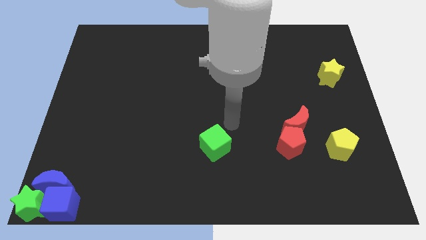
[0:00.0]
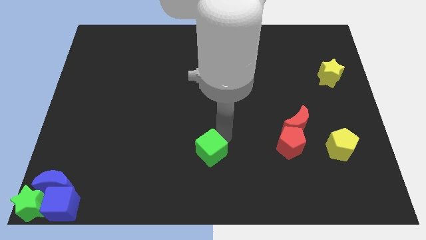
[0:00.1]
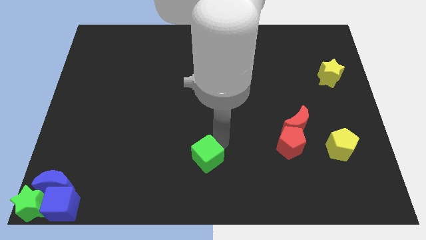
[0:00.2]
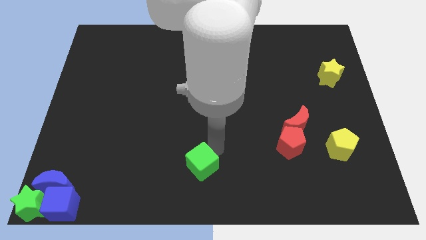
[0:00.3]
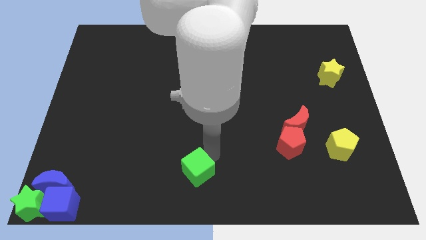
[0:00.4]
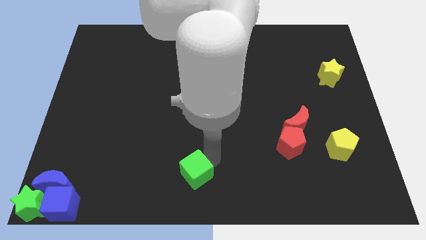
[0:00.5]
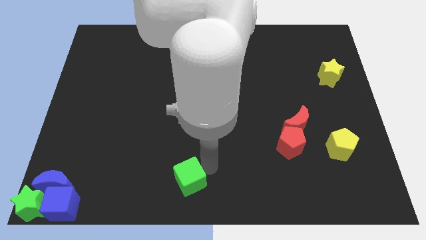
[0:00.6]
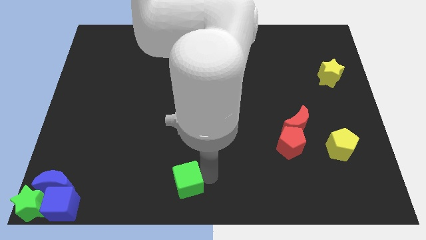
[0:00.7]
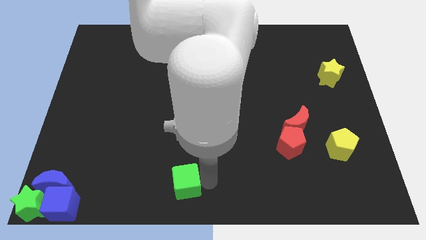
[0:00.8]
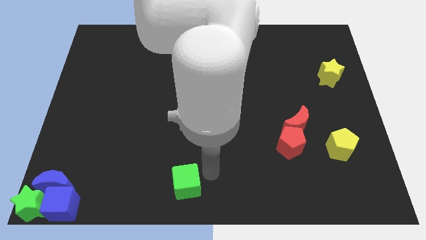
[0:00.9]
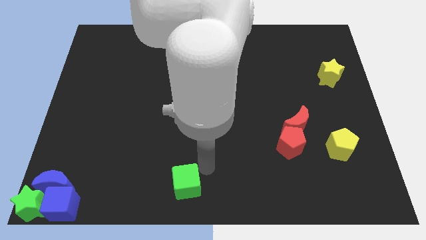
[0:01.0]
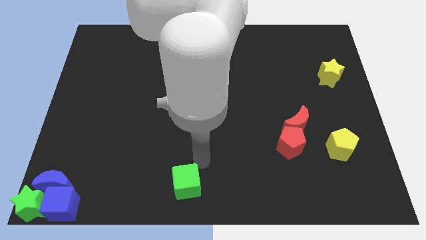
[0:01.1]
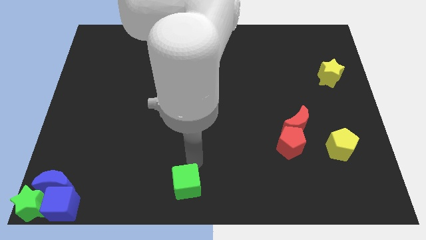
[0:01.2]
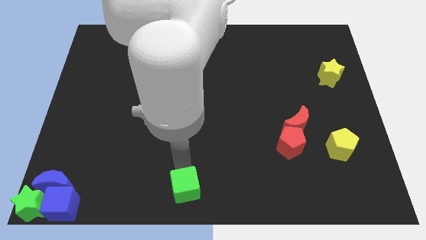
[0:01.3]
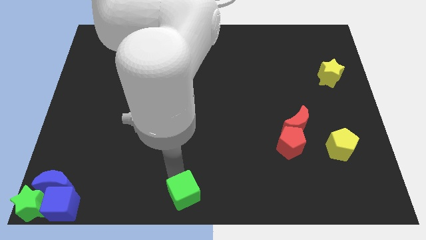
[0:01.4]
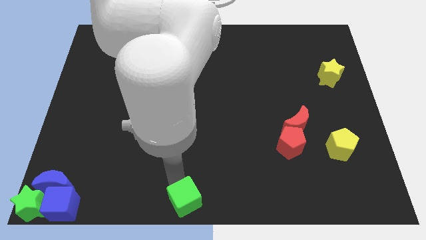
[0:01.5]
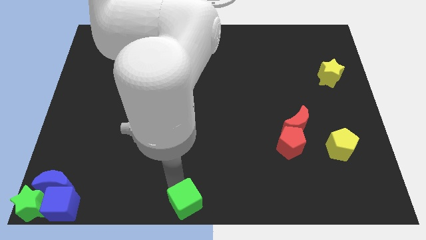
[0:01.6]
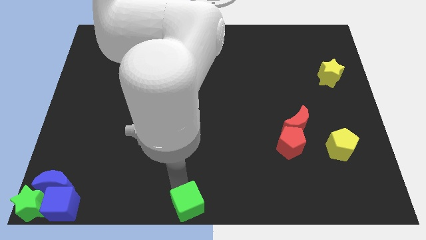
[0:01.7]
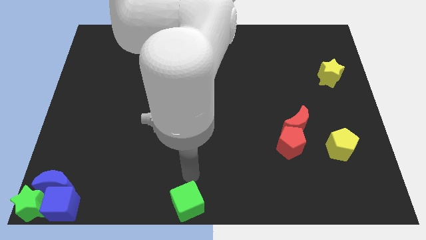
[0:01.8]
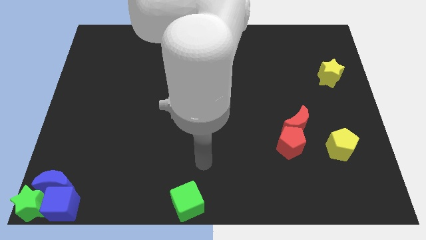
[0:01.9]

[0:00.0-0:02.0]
place the green cube to the bottom center of the board

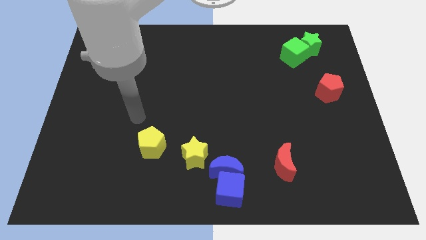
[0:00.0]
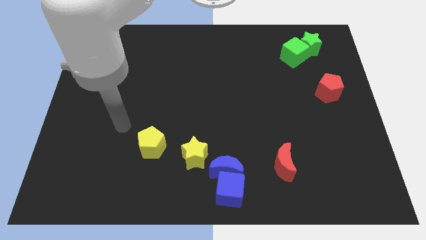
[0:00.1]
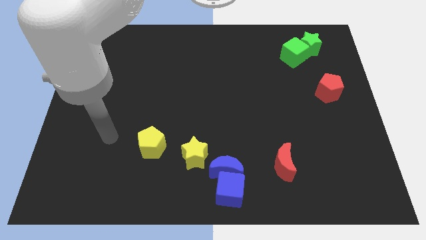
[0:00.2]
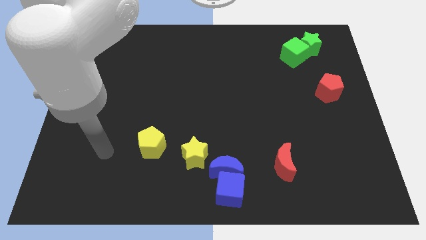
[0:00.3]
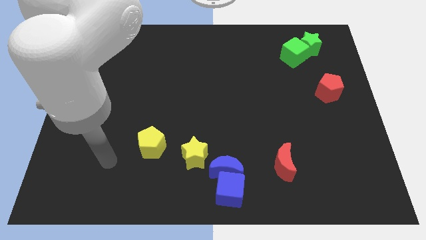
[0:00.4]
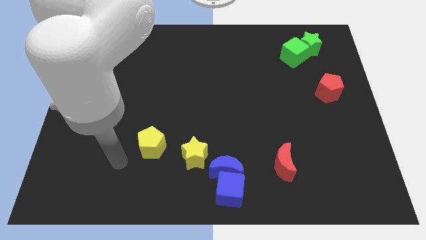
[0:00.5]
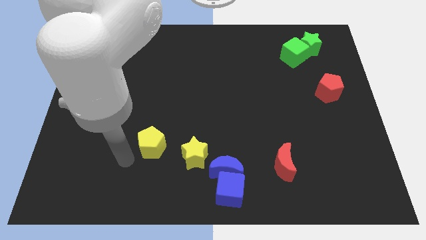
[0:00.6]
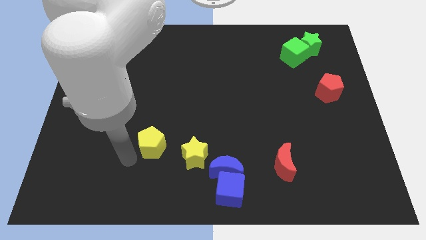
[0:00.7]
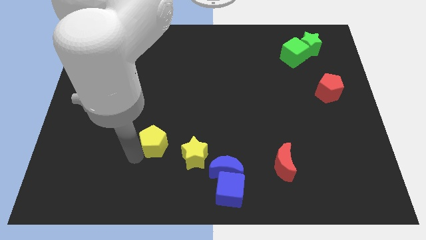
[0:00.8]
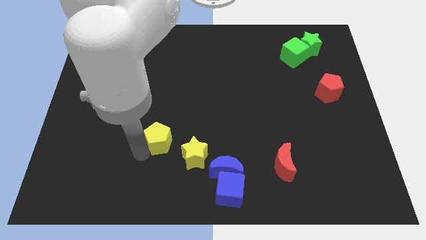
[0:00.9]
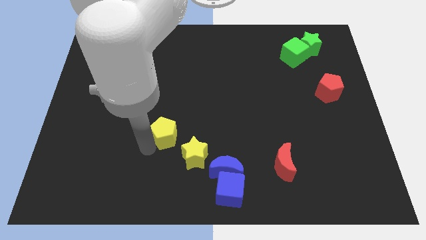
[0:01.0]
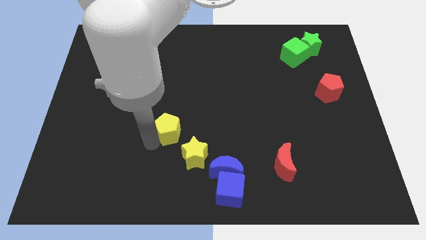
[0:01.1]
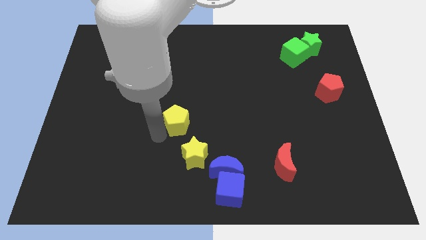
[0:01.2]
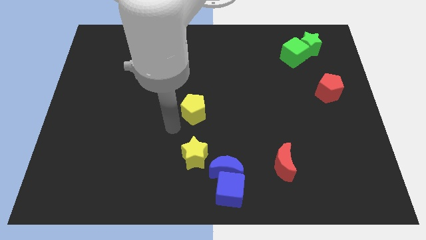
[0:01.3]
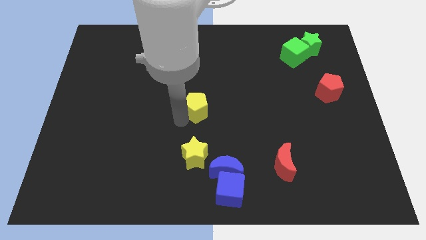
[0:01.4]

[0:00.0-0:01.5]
put the yellow pentagon above the yellow star

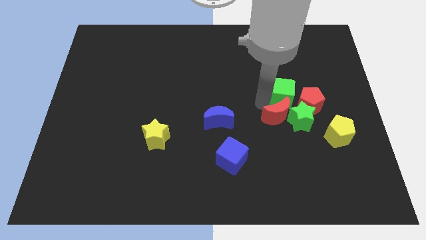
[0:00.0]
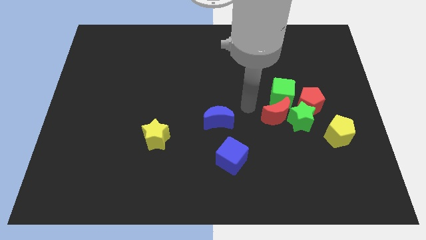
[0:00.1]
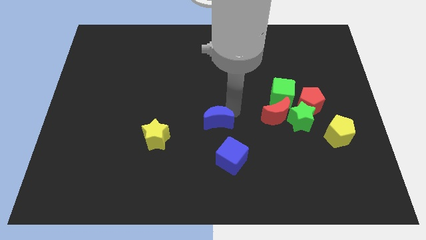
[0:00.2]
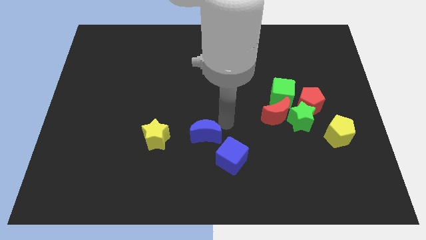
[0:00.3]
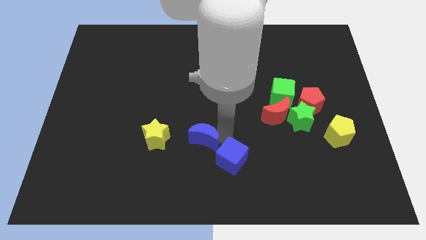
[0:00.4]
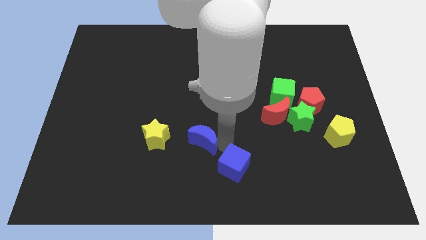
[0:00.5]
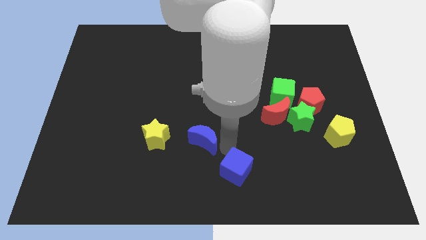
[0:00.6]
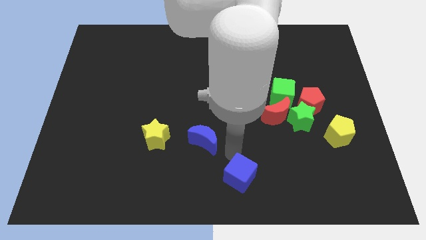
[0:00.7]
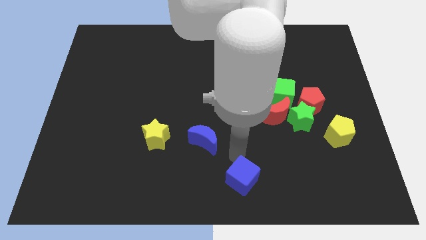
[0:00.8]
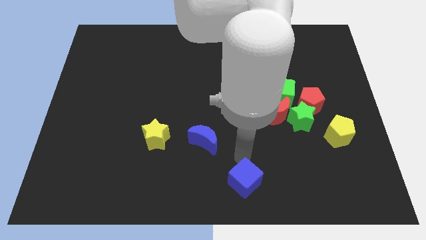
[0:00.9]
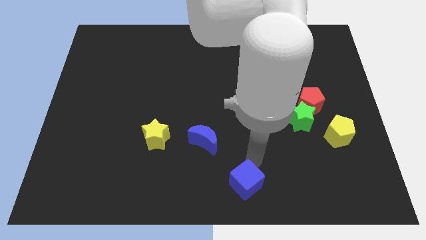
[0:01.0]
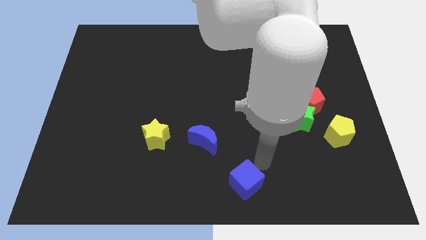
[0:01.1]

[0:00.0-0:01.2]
move the blue cube diagonally bottom right to the blue moon

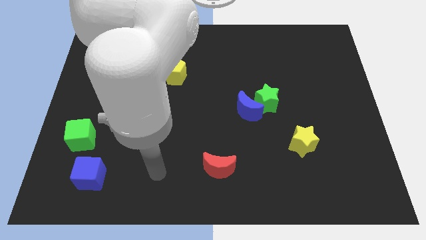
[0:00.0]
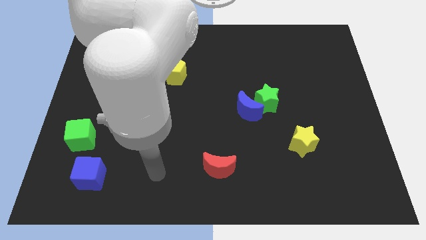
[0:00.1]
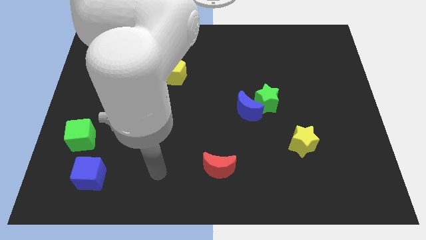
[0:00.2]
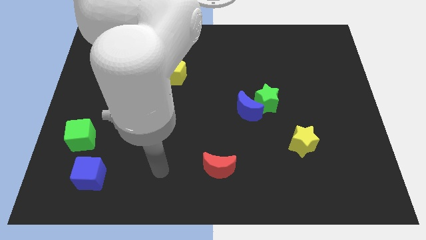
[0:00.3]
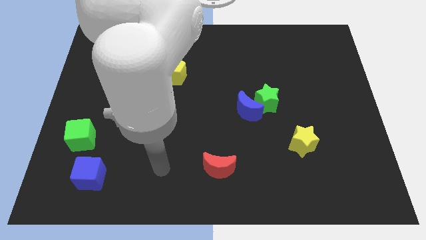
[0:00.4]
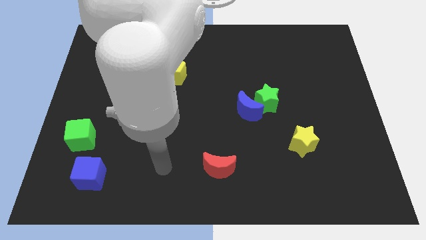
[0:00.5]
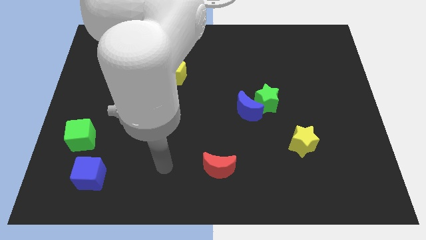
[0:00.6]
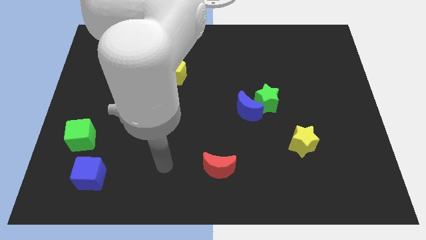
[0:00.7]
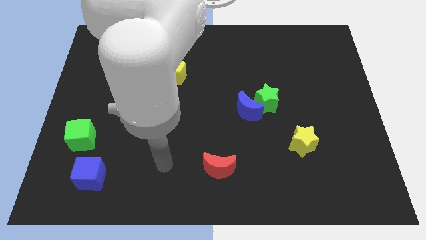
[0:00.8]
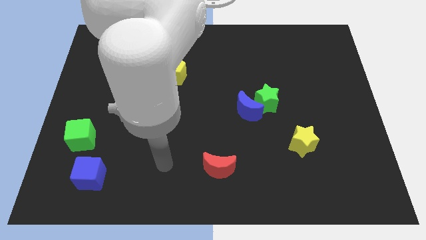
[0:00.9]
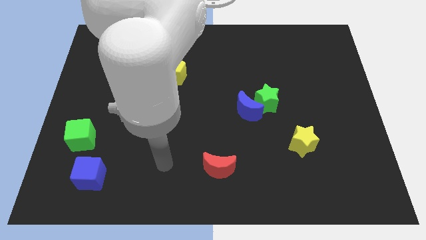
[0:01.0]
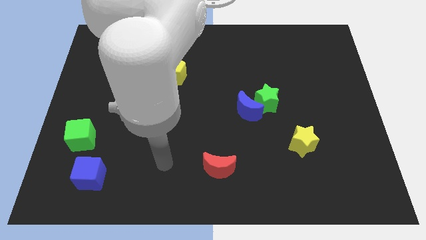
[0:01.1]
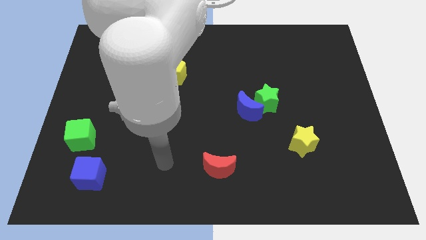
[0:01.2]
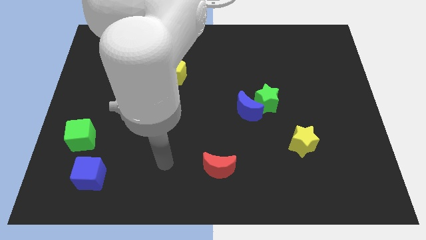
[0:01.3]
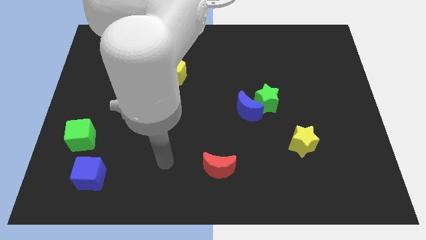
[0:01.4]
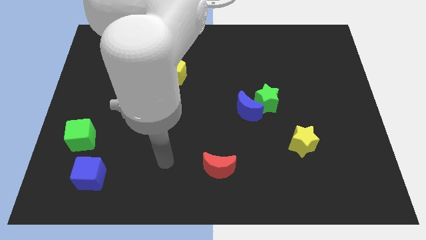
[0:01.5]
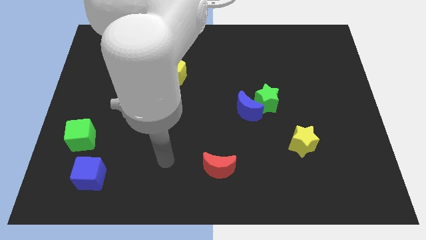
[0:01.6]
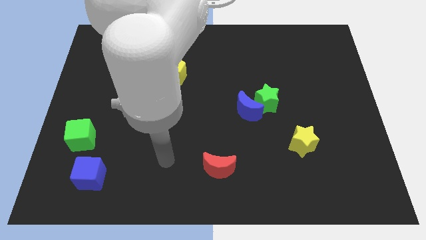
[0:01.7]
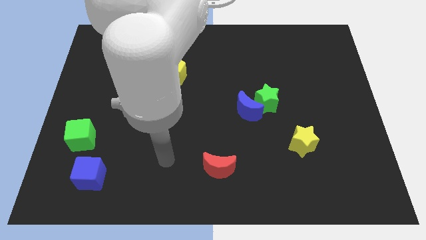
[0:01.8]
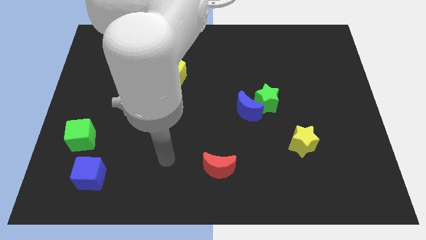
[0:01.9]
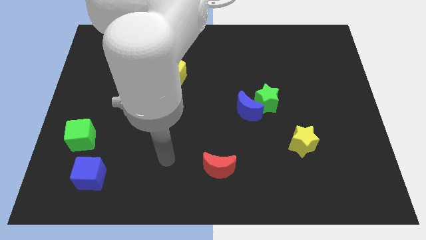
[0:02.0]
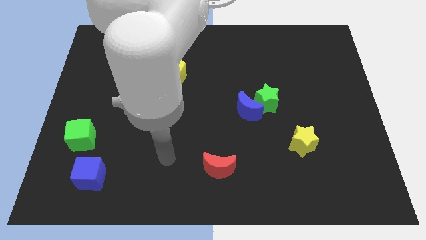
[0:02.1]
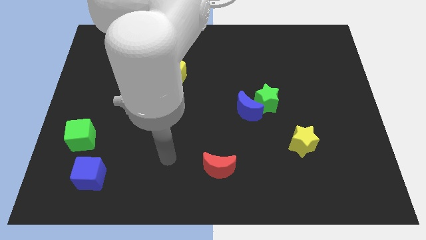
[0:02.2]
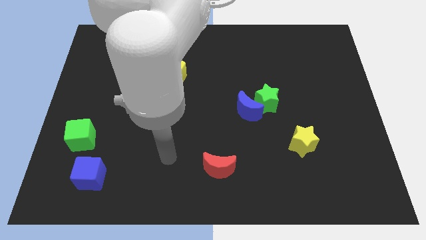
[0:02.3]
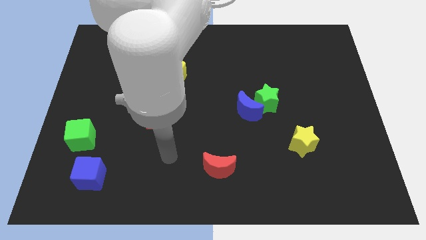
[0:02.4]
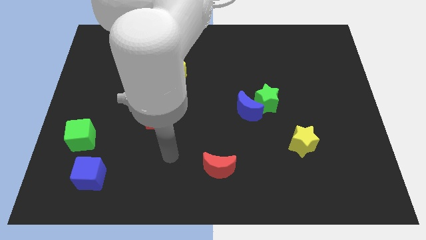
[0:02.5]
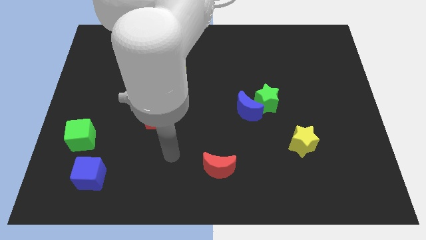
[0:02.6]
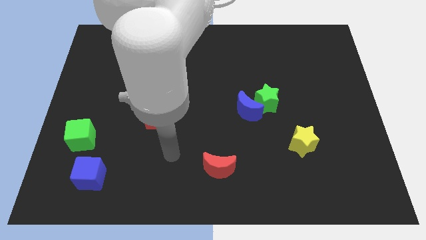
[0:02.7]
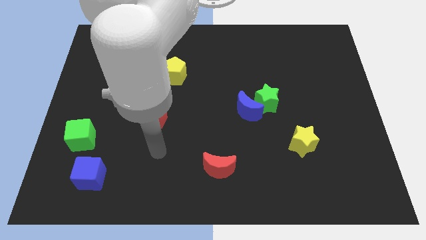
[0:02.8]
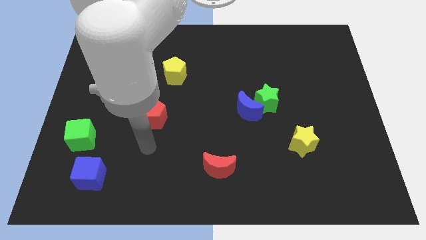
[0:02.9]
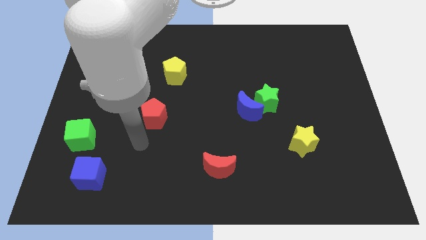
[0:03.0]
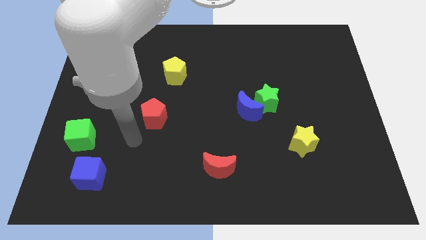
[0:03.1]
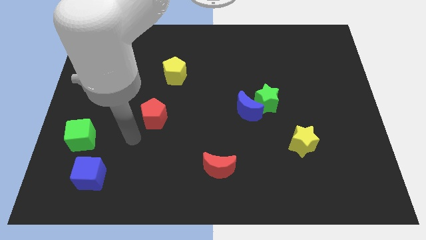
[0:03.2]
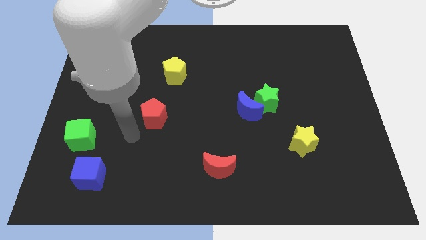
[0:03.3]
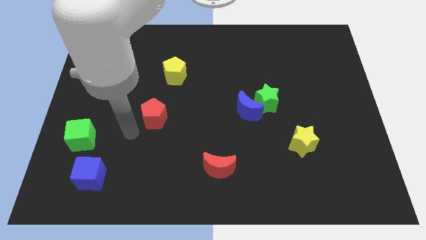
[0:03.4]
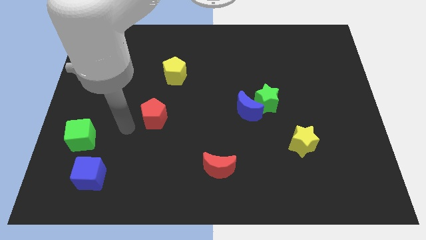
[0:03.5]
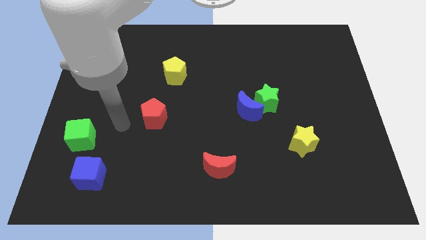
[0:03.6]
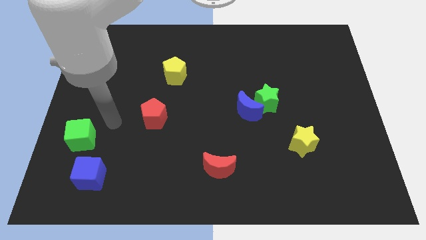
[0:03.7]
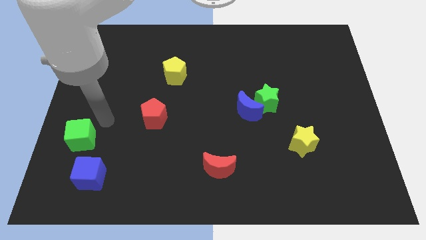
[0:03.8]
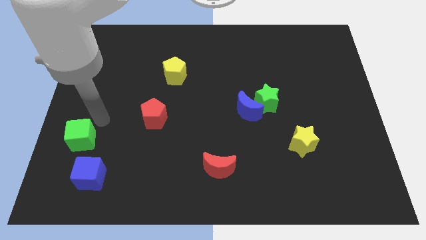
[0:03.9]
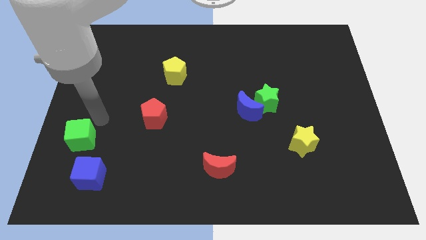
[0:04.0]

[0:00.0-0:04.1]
move arm near green cube

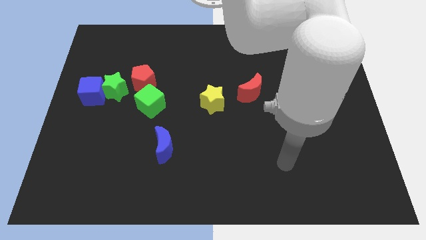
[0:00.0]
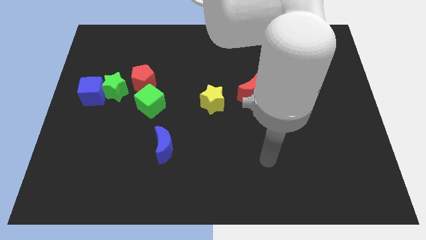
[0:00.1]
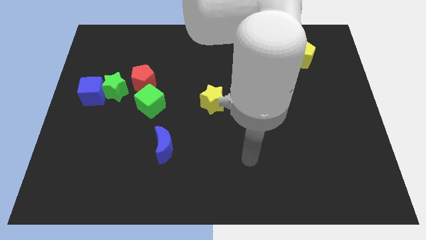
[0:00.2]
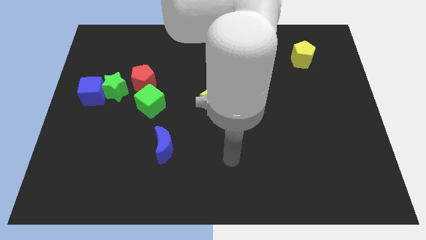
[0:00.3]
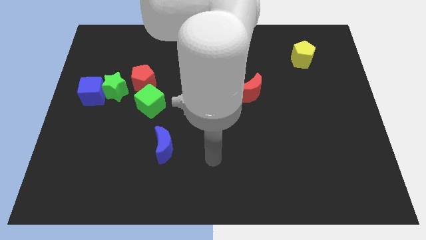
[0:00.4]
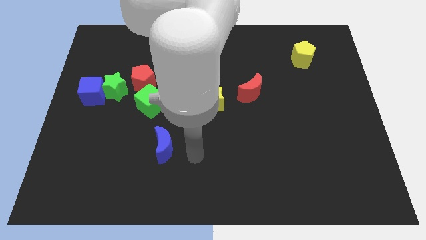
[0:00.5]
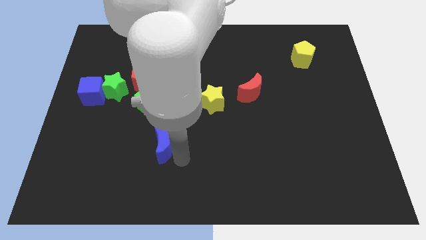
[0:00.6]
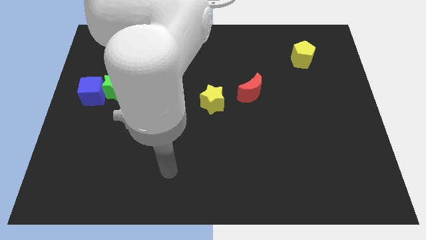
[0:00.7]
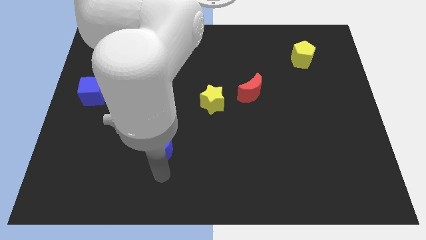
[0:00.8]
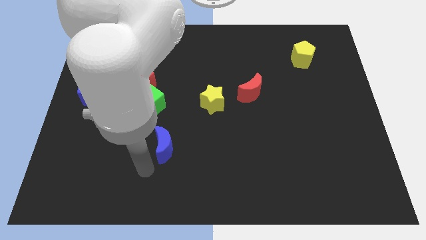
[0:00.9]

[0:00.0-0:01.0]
place arm at the bottom blue moon
